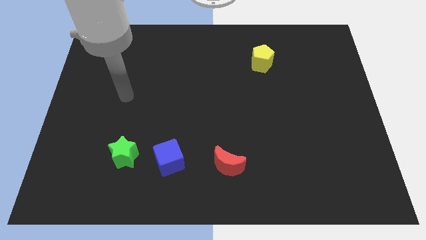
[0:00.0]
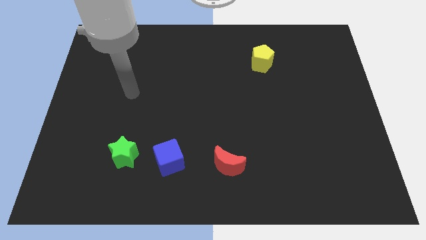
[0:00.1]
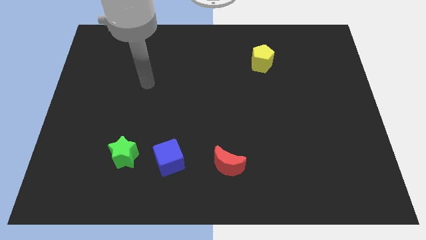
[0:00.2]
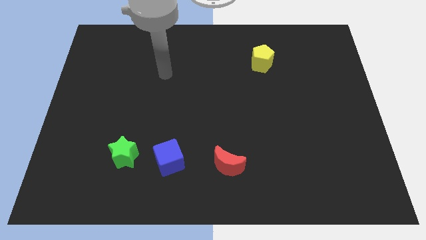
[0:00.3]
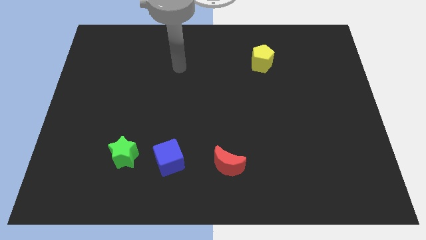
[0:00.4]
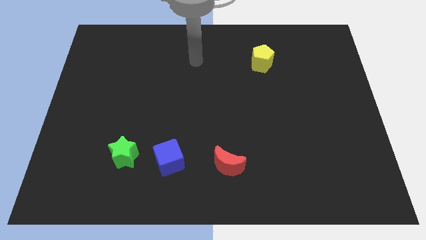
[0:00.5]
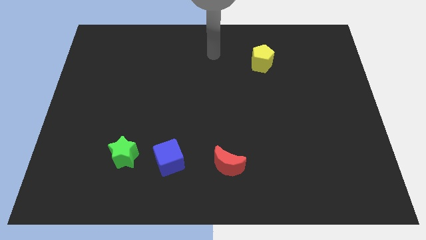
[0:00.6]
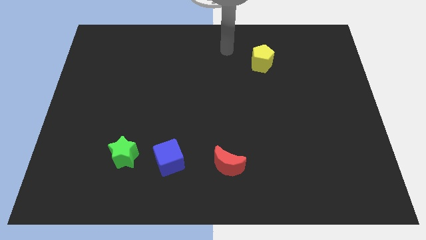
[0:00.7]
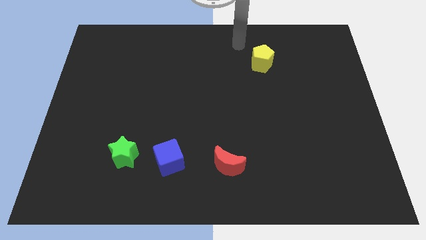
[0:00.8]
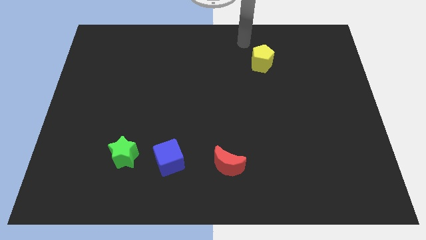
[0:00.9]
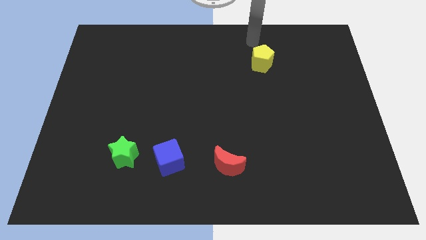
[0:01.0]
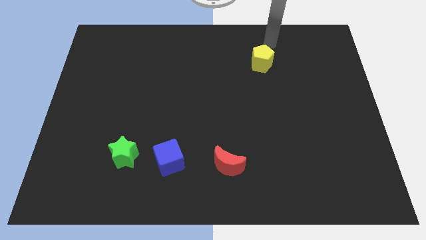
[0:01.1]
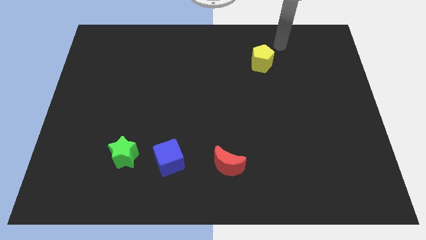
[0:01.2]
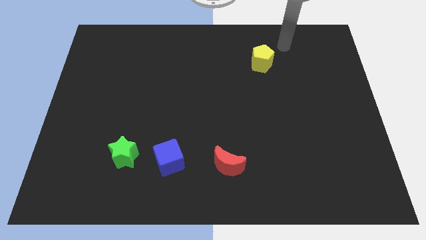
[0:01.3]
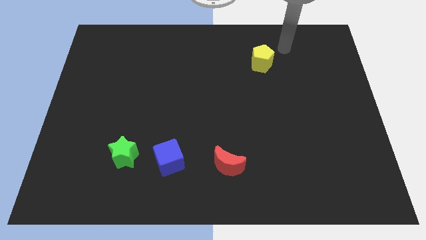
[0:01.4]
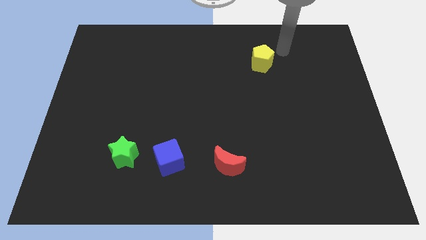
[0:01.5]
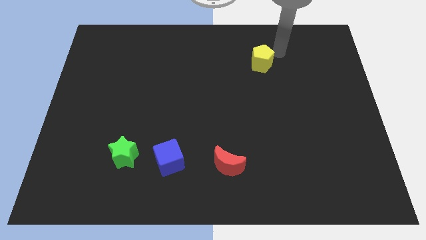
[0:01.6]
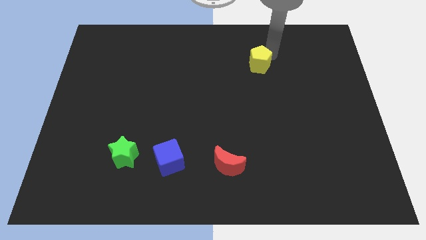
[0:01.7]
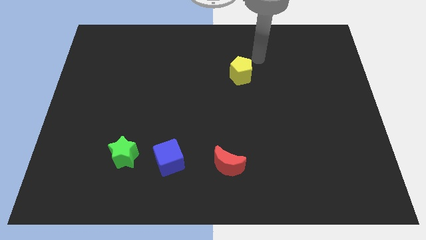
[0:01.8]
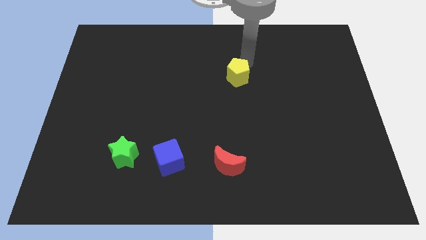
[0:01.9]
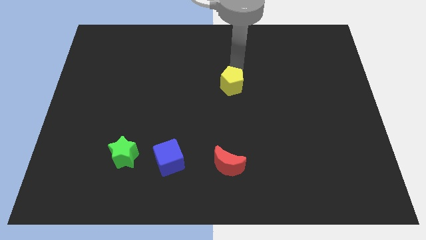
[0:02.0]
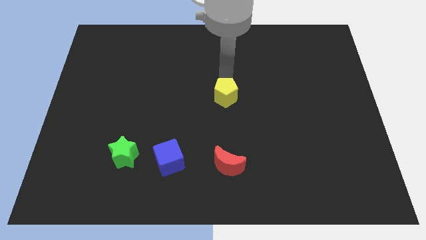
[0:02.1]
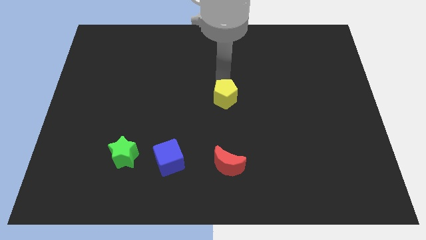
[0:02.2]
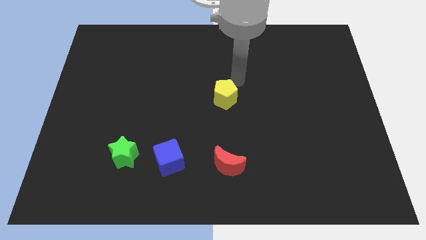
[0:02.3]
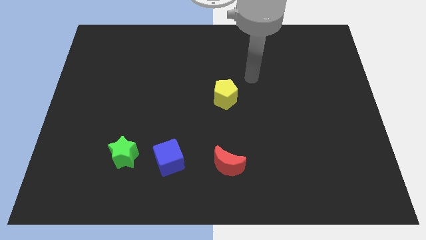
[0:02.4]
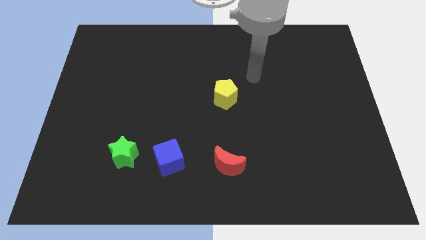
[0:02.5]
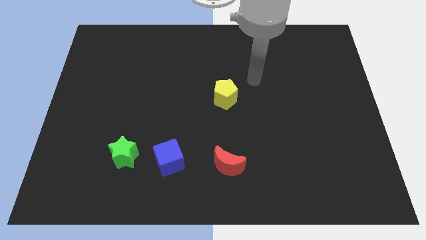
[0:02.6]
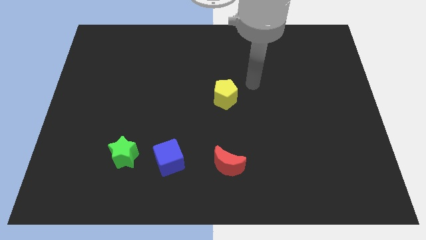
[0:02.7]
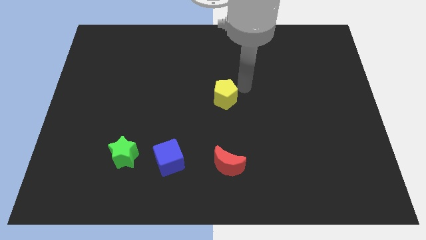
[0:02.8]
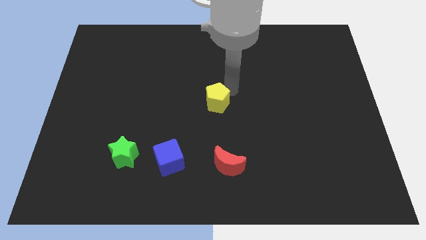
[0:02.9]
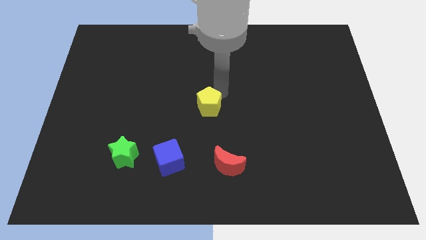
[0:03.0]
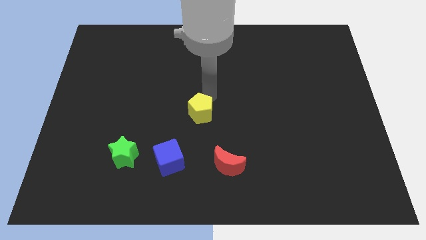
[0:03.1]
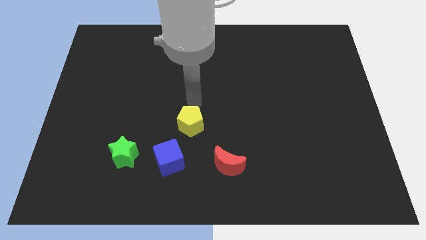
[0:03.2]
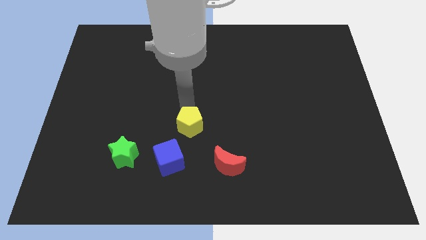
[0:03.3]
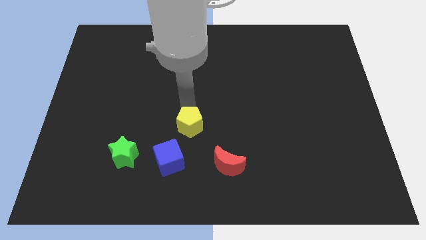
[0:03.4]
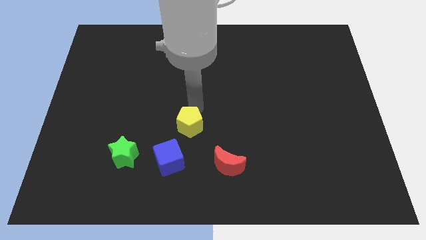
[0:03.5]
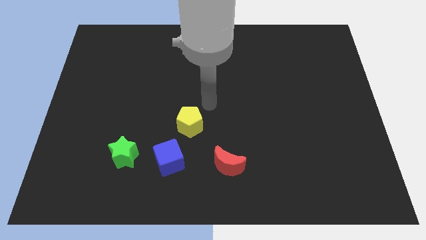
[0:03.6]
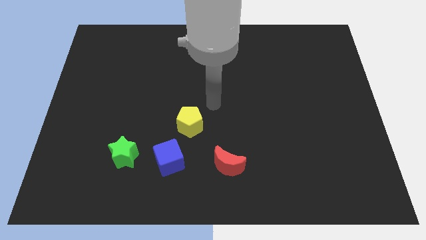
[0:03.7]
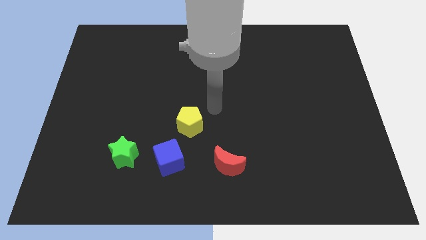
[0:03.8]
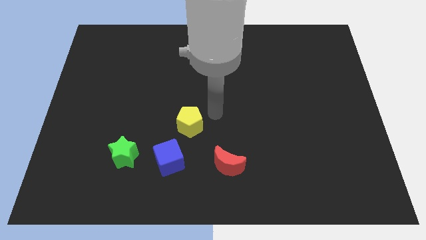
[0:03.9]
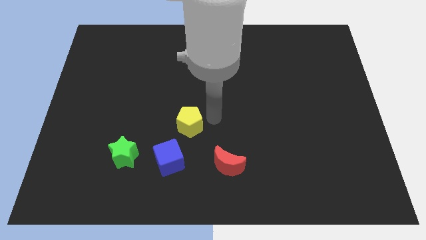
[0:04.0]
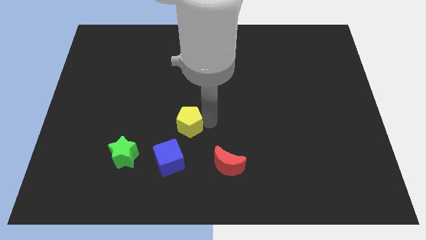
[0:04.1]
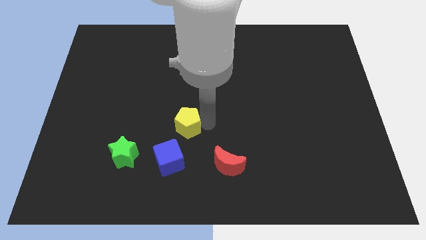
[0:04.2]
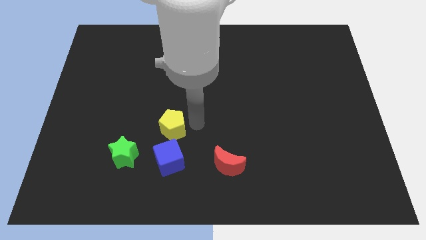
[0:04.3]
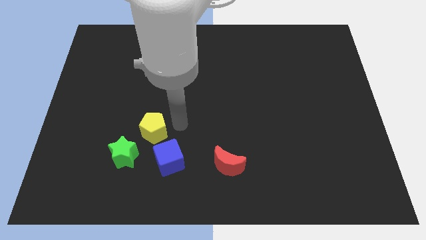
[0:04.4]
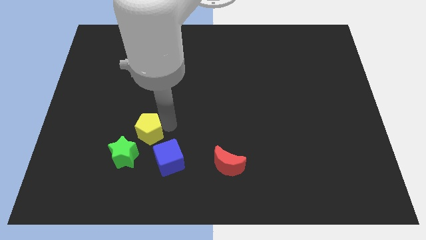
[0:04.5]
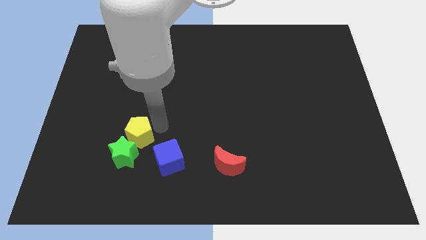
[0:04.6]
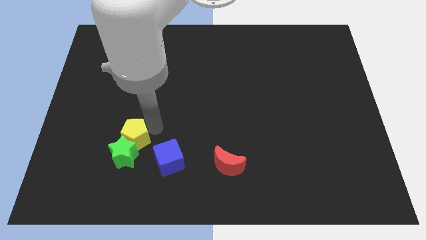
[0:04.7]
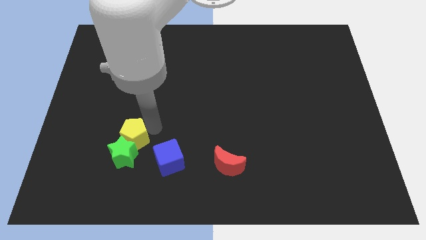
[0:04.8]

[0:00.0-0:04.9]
slide the yellow pentagon towards the star

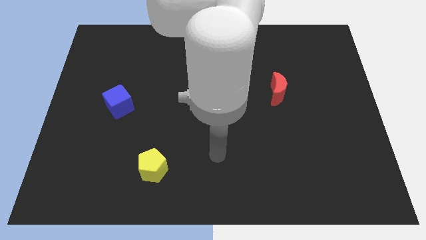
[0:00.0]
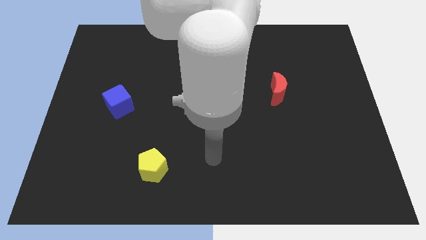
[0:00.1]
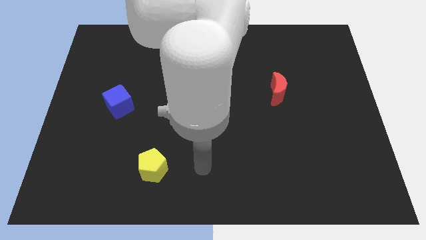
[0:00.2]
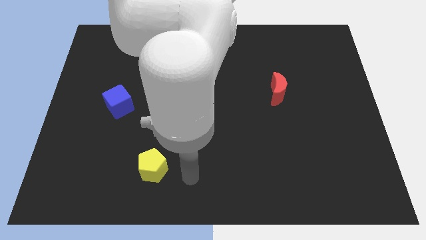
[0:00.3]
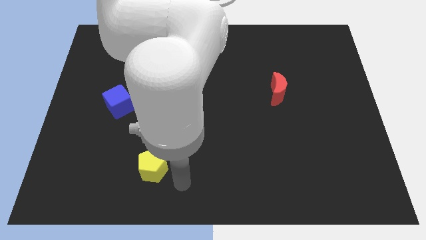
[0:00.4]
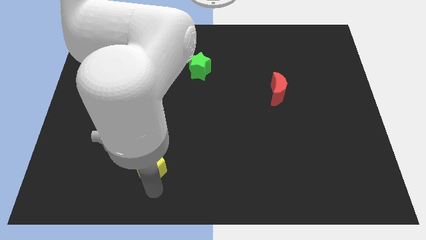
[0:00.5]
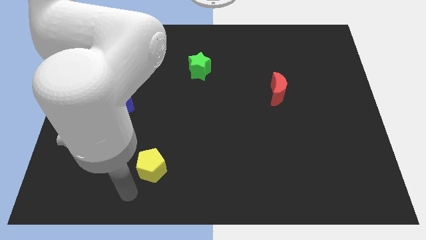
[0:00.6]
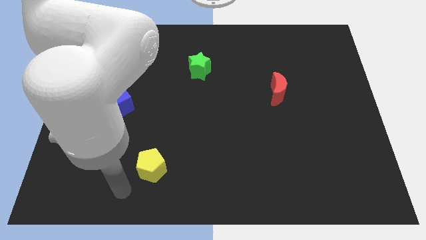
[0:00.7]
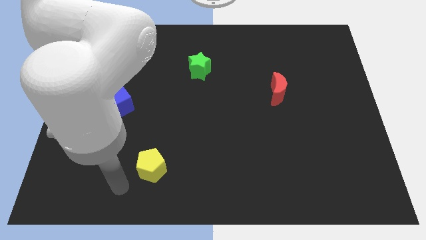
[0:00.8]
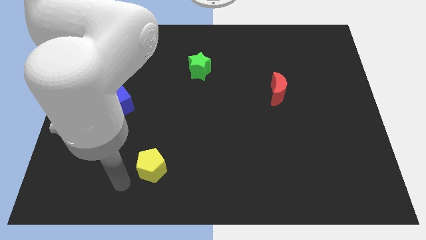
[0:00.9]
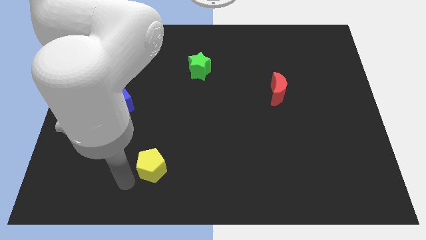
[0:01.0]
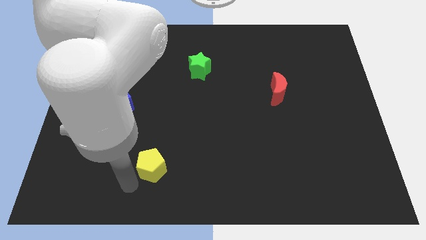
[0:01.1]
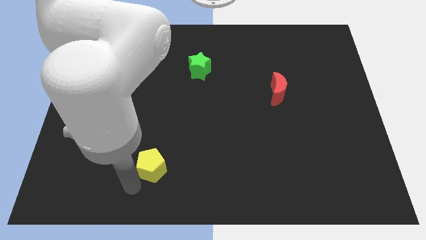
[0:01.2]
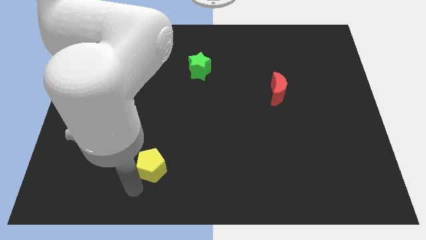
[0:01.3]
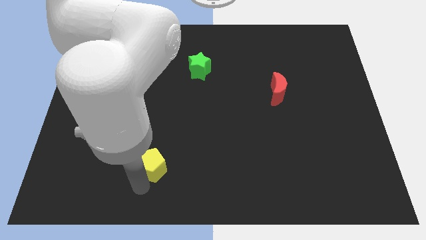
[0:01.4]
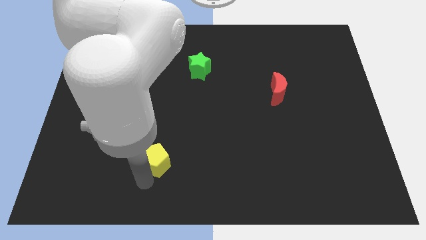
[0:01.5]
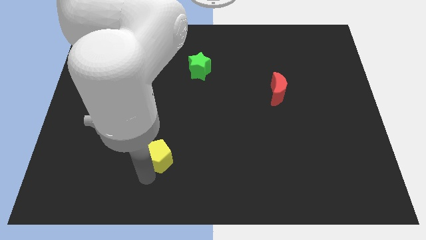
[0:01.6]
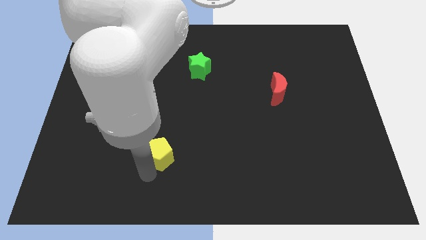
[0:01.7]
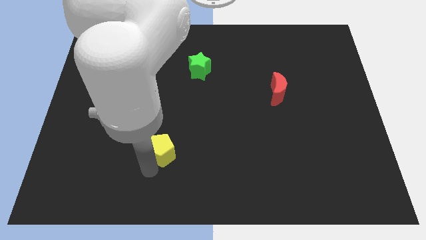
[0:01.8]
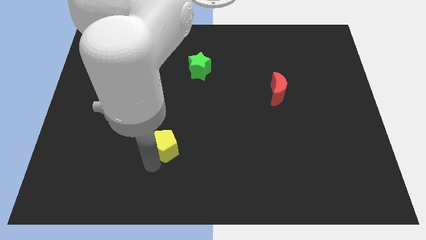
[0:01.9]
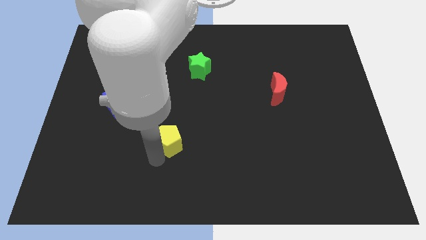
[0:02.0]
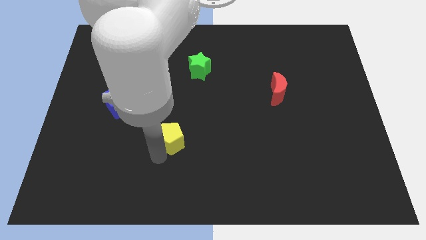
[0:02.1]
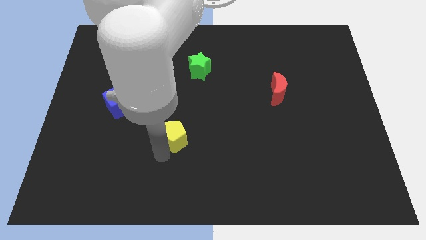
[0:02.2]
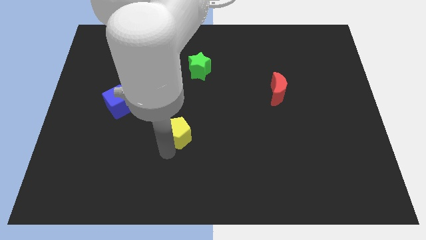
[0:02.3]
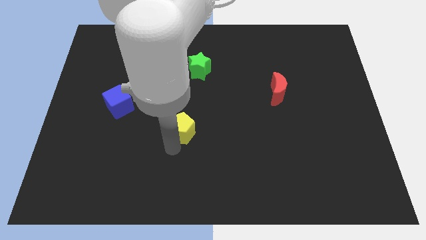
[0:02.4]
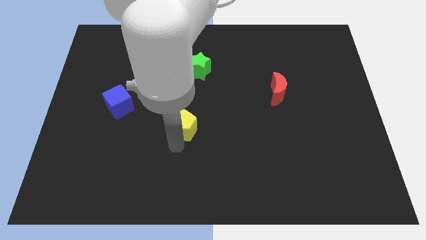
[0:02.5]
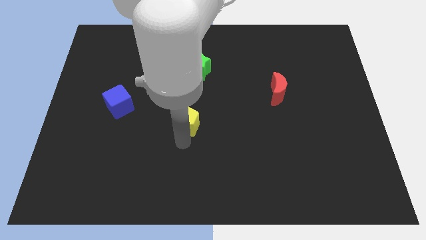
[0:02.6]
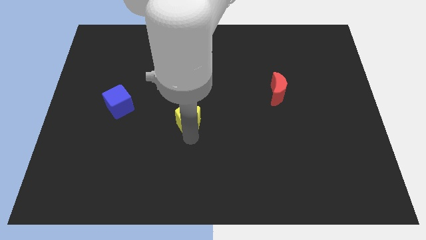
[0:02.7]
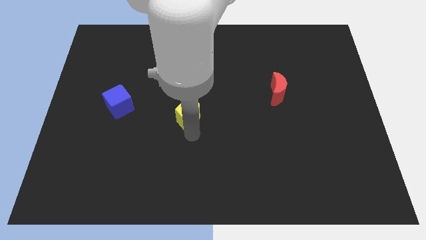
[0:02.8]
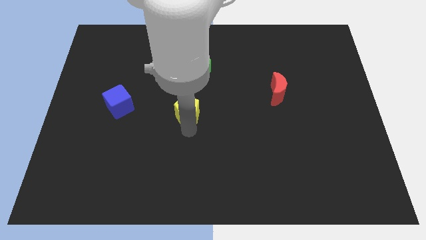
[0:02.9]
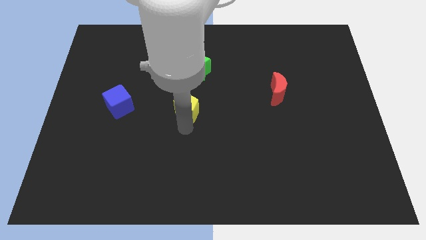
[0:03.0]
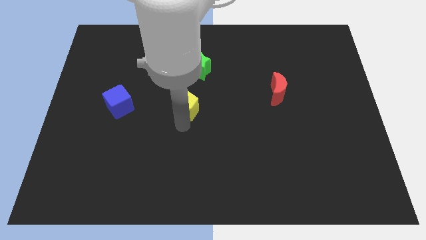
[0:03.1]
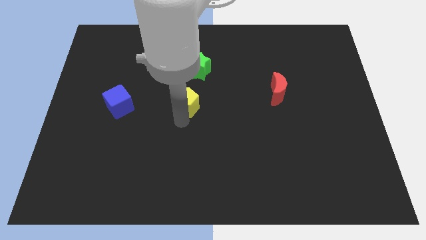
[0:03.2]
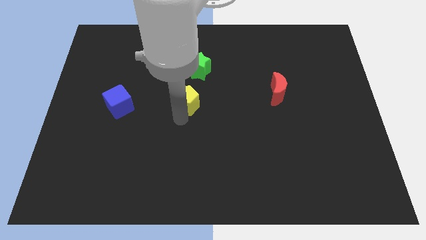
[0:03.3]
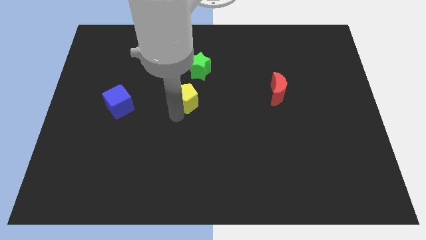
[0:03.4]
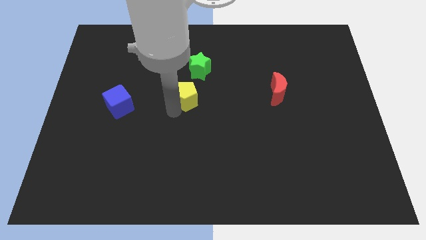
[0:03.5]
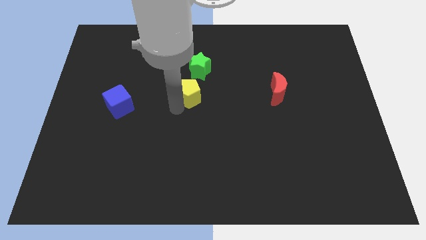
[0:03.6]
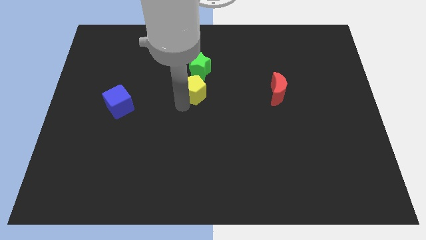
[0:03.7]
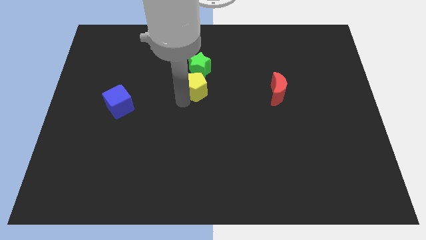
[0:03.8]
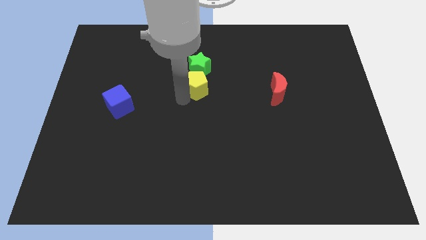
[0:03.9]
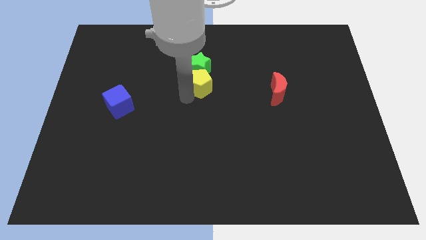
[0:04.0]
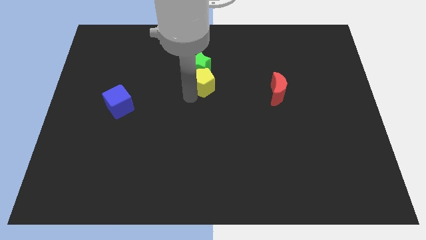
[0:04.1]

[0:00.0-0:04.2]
push the yellow block next to the green block
